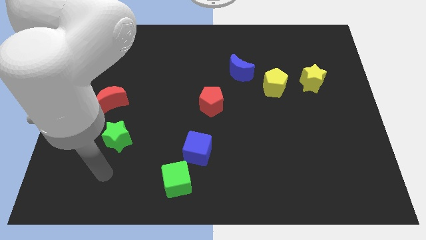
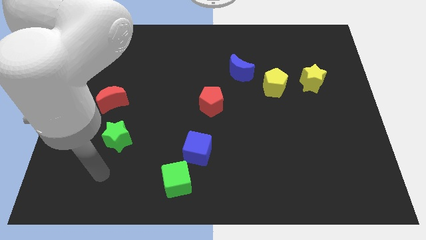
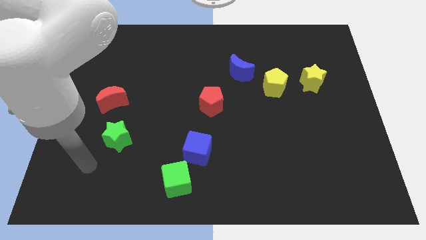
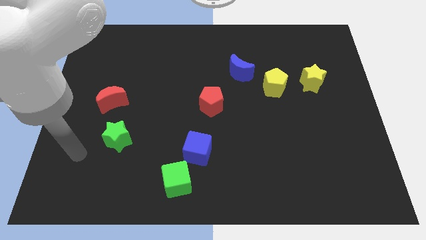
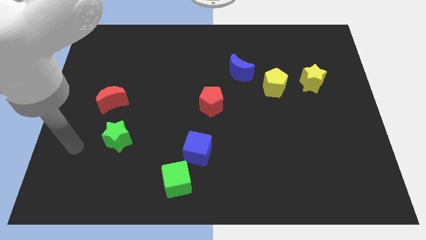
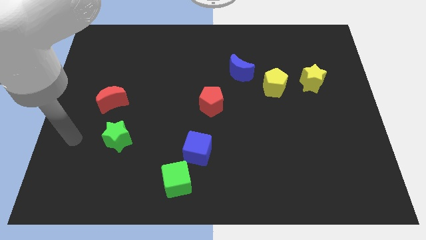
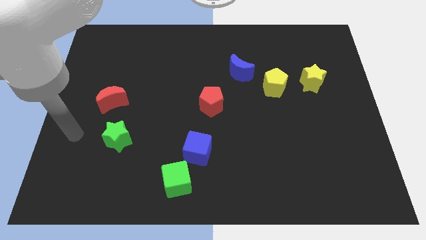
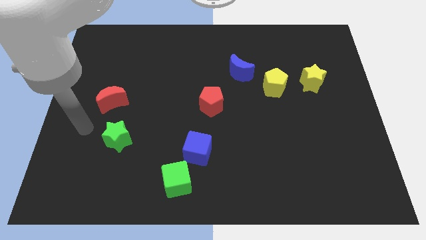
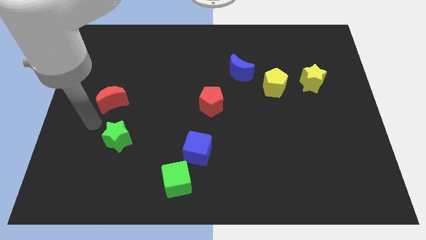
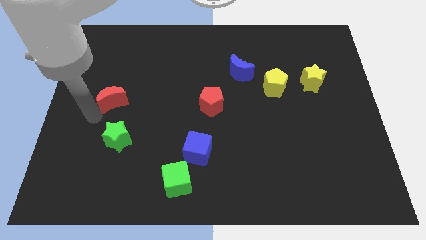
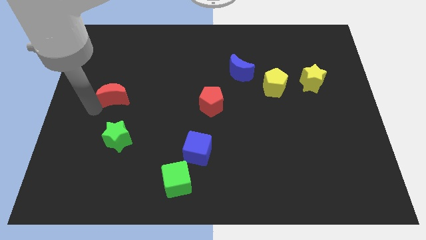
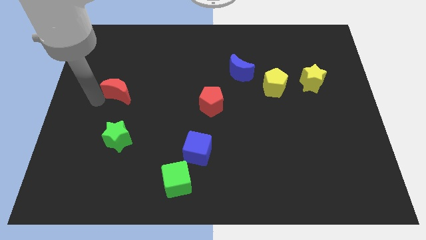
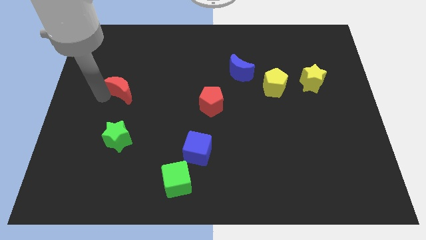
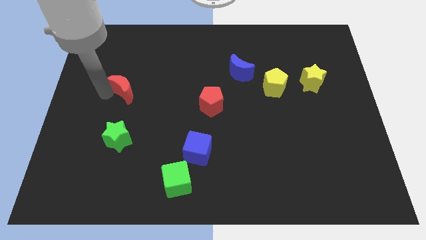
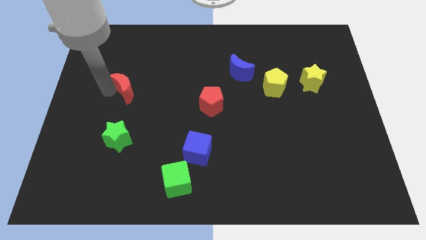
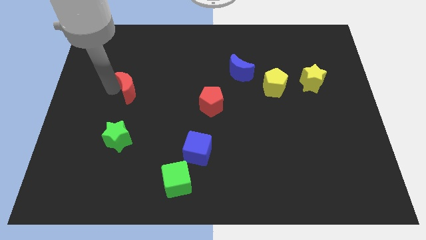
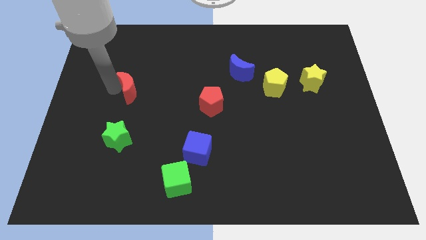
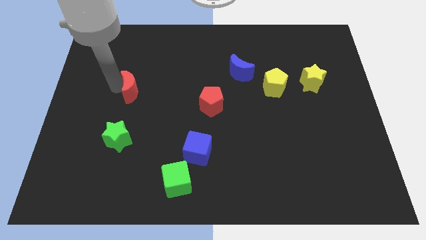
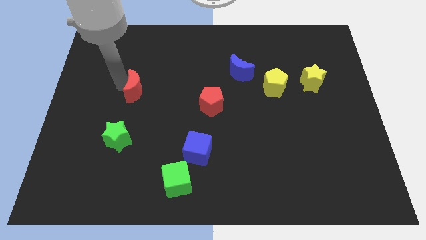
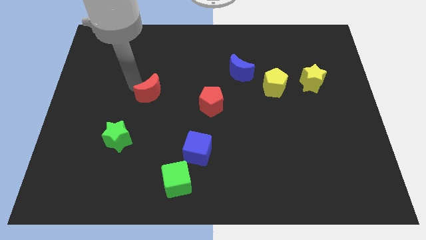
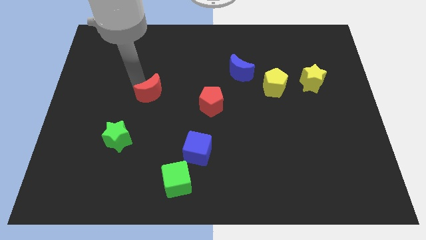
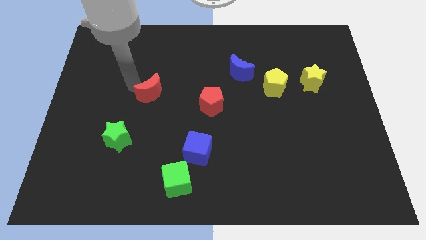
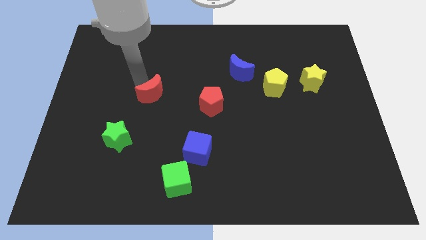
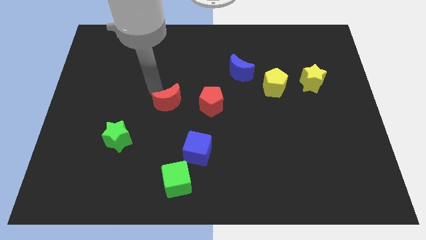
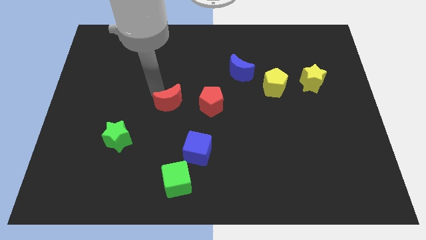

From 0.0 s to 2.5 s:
place the red moon to the left of the red pentagon

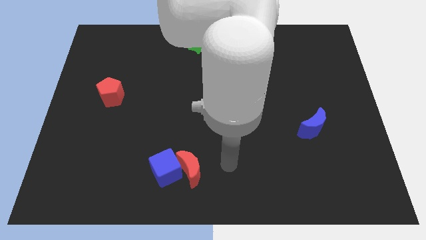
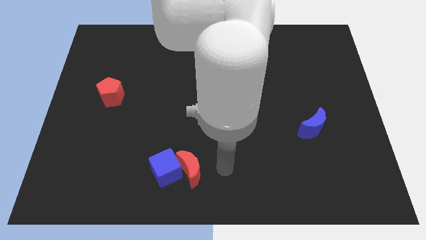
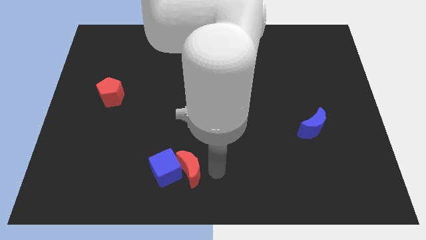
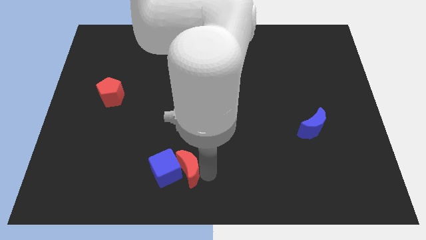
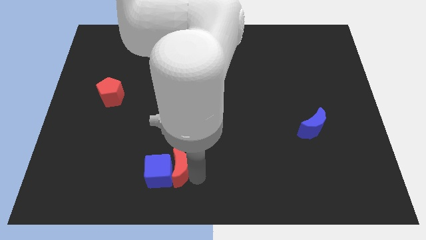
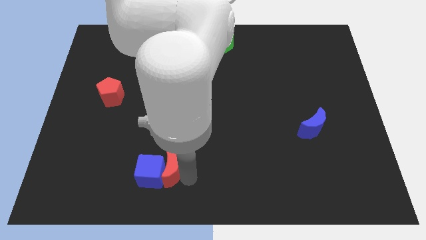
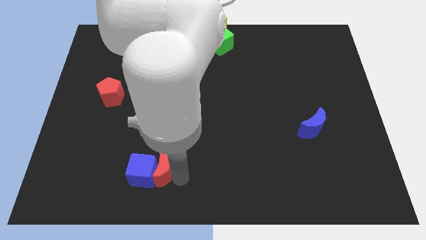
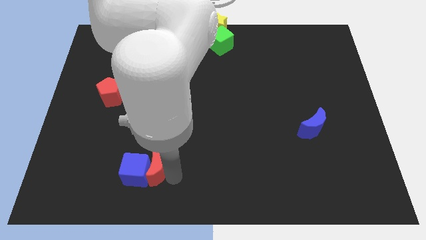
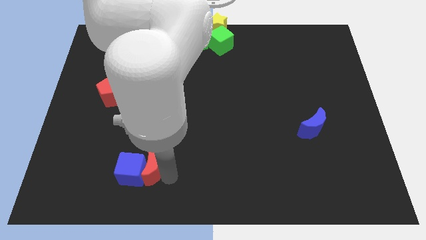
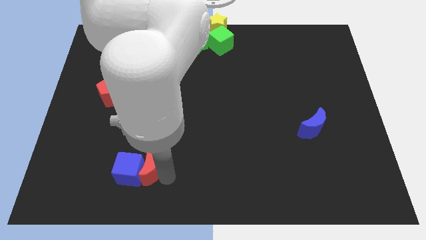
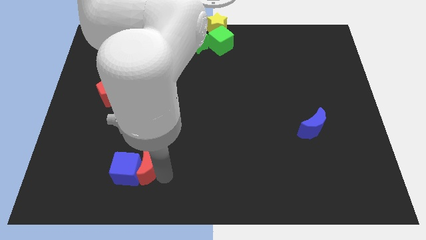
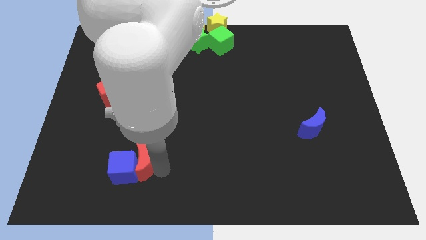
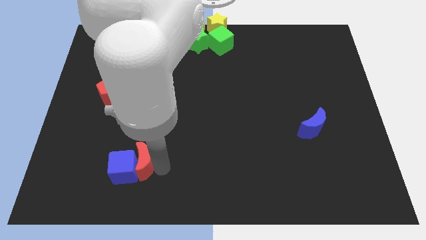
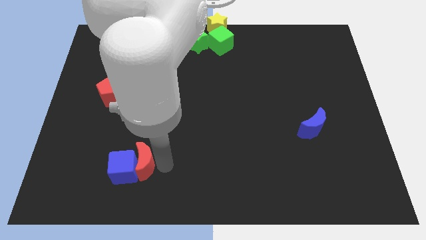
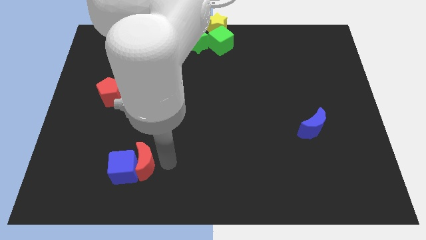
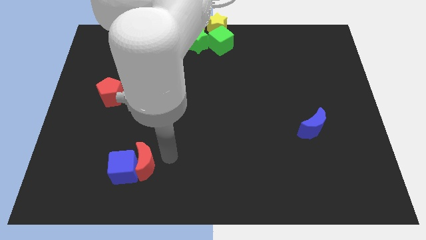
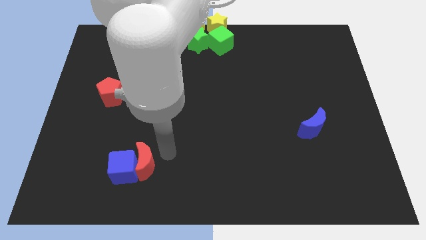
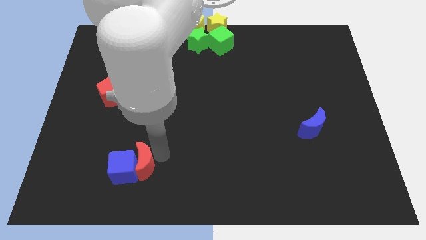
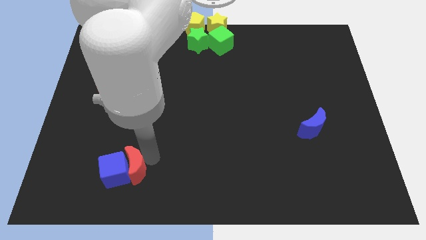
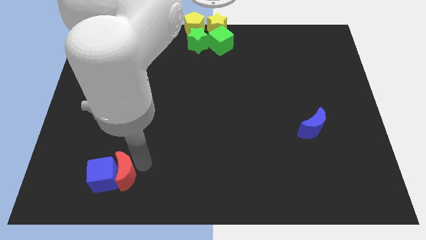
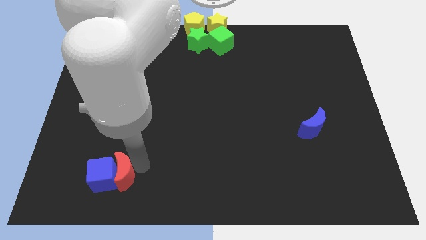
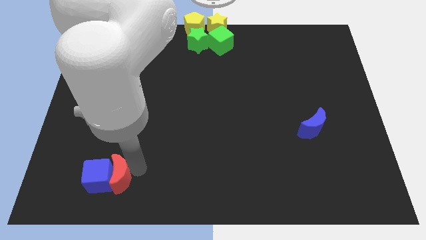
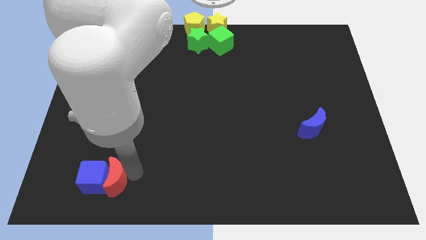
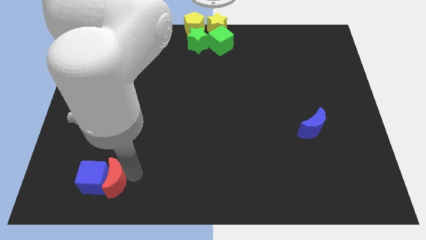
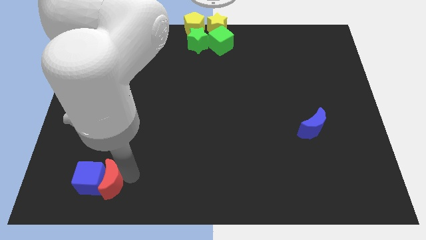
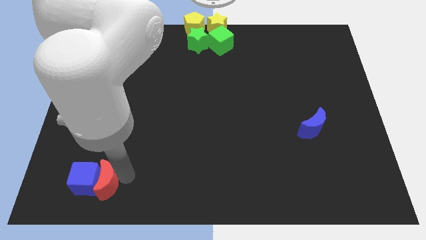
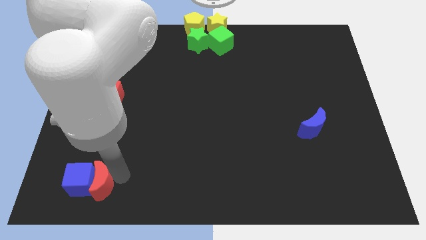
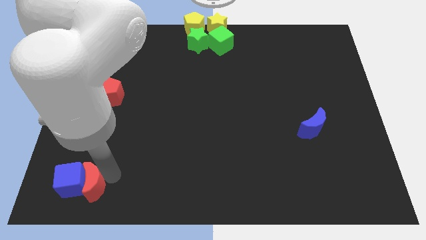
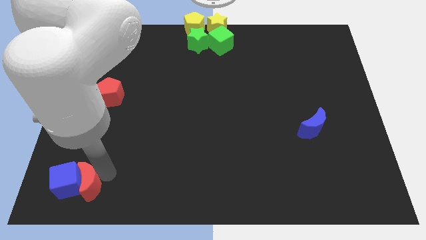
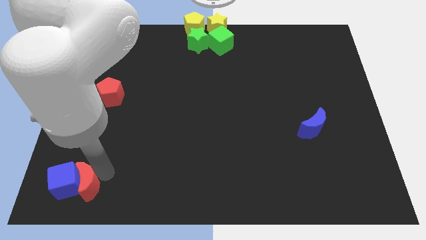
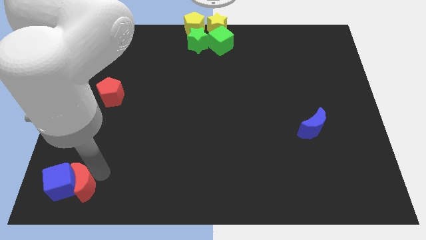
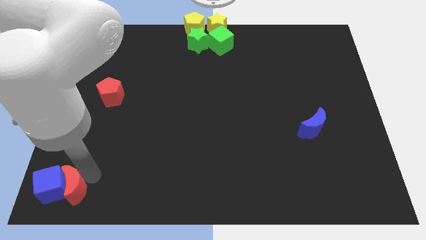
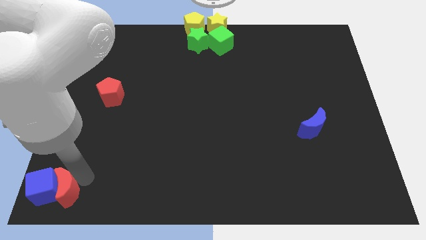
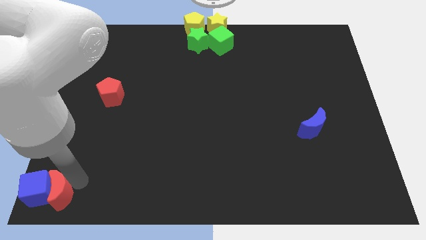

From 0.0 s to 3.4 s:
place the red crescent and blue cube at bottom left corner of the board

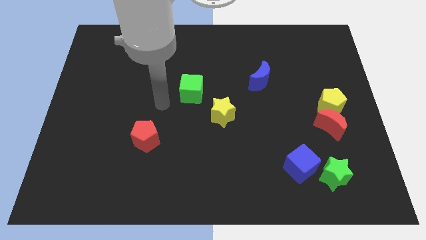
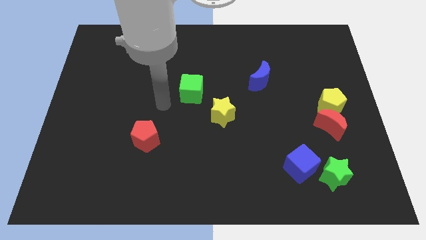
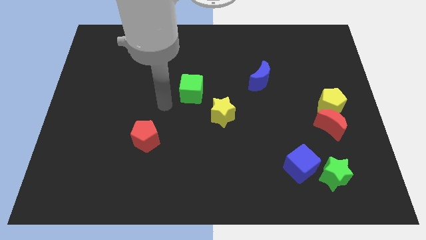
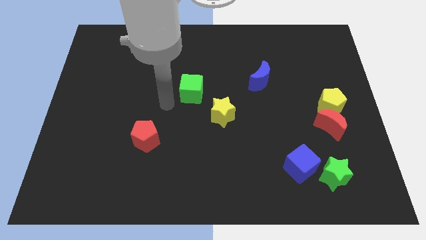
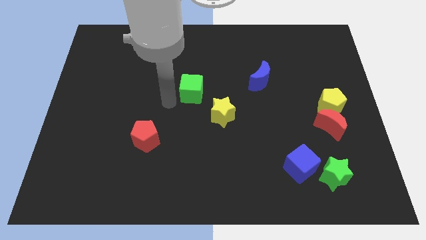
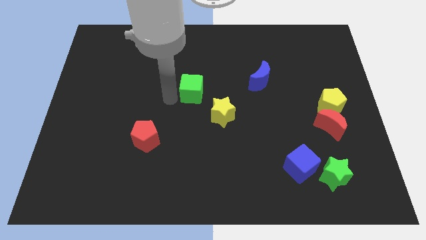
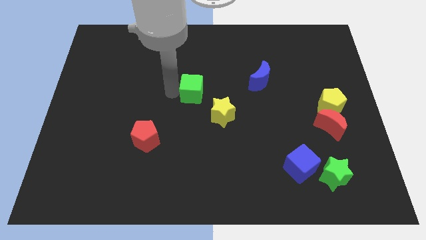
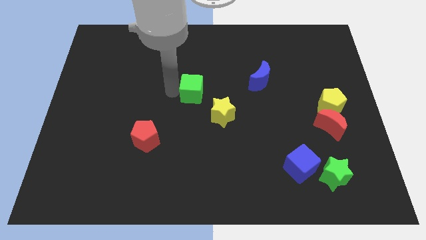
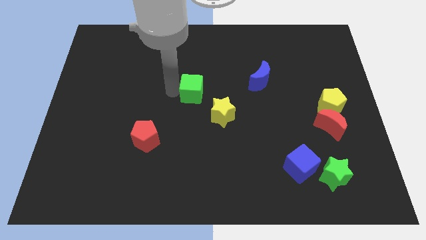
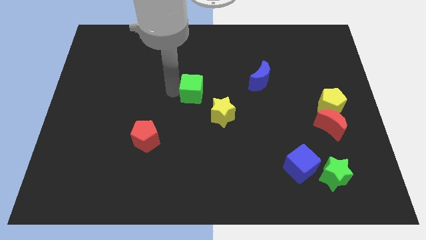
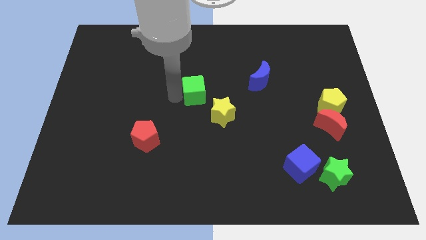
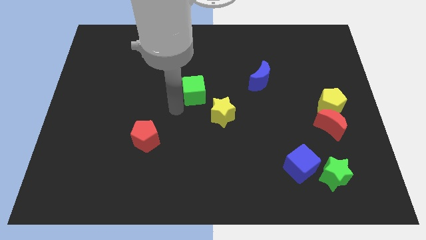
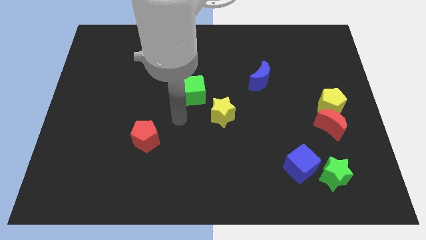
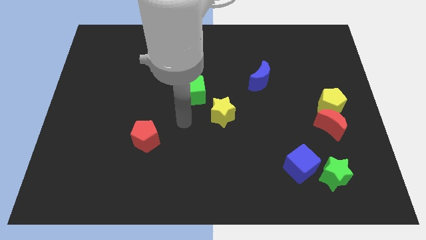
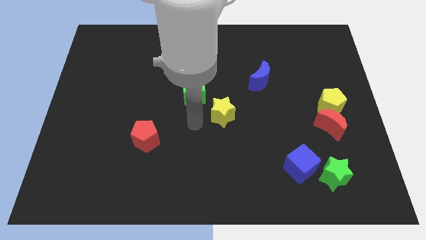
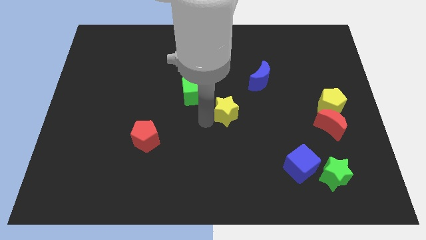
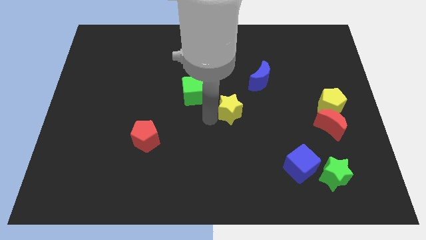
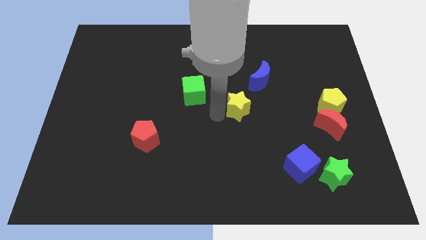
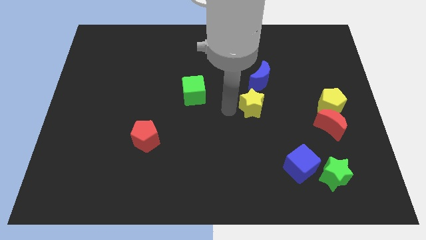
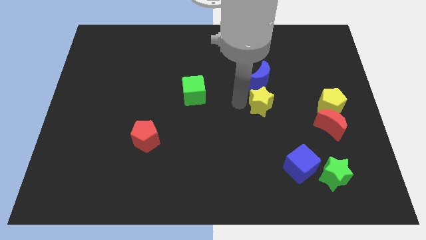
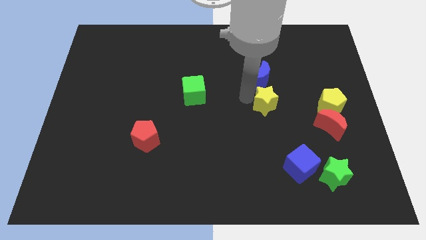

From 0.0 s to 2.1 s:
slightly touch the green cube

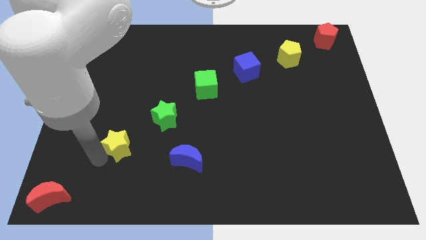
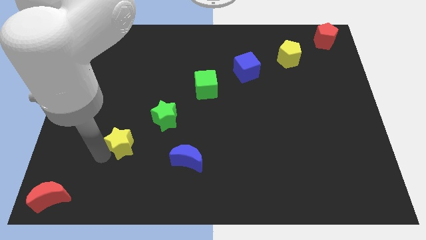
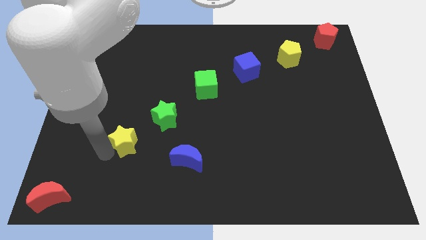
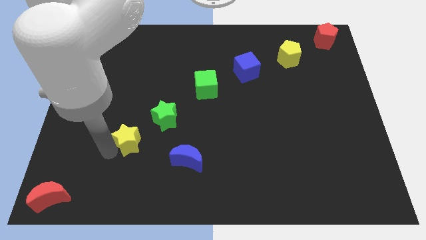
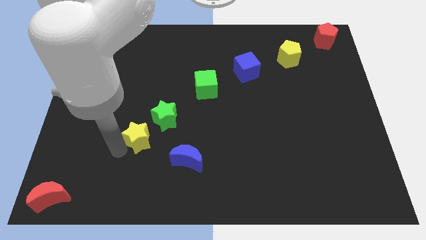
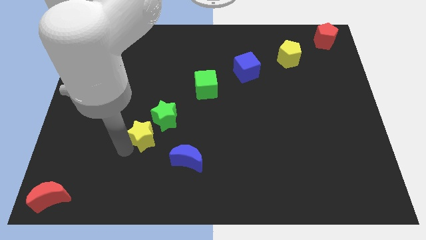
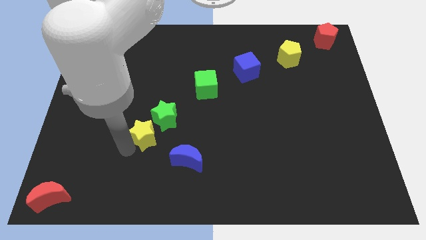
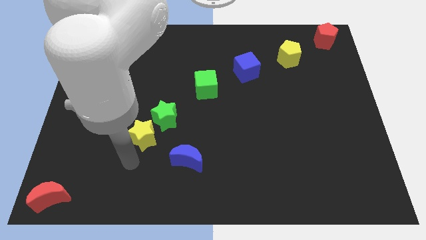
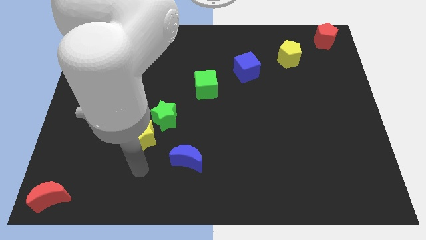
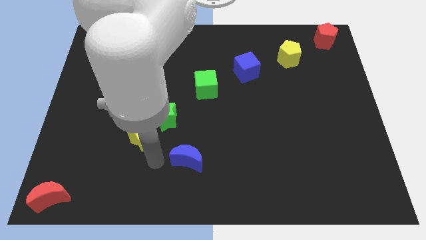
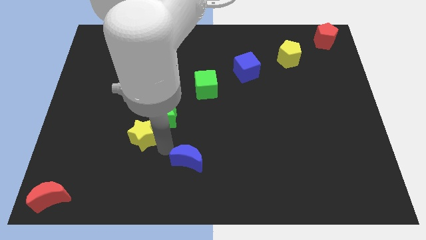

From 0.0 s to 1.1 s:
push yellow star towards the green star
